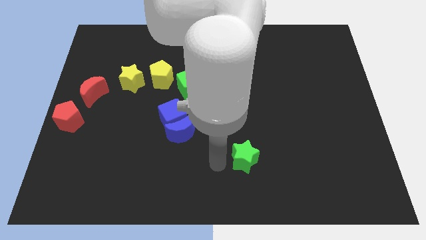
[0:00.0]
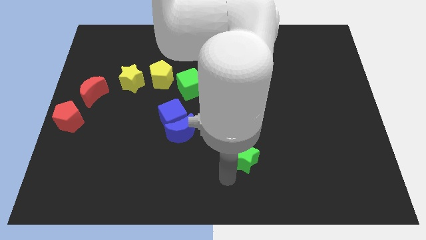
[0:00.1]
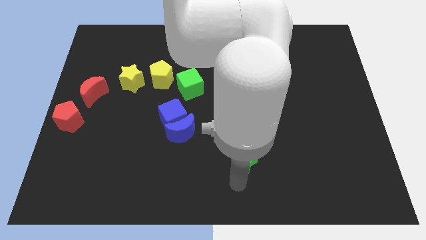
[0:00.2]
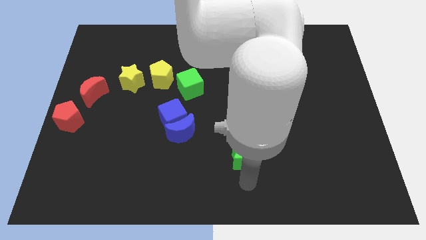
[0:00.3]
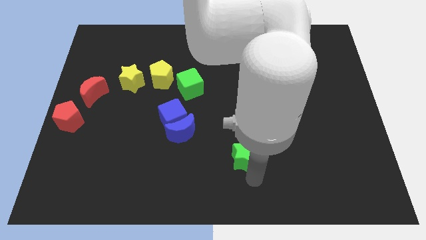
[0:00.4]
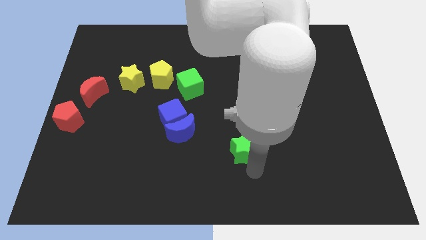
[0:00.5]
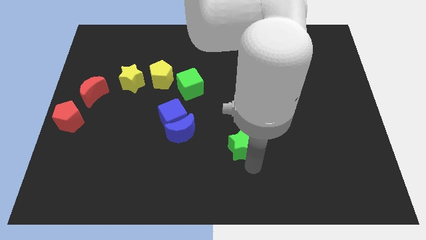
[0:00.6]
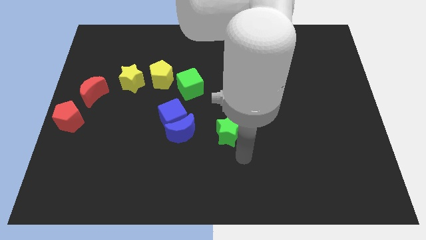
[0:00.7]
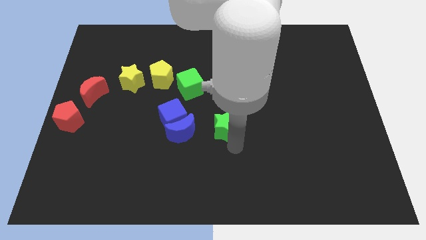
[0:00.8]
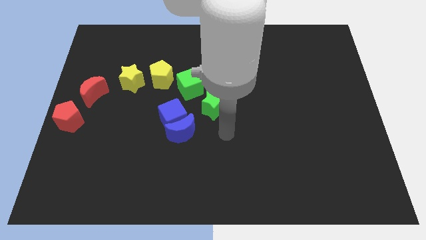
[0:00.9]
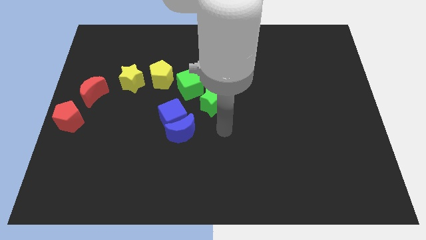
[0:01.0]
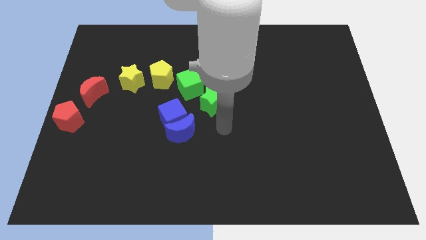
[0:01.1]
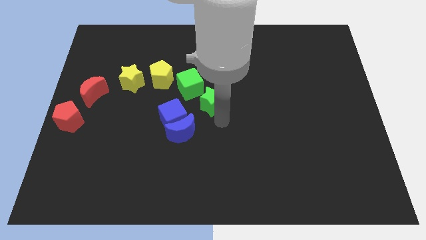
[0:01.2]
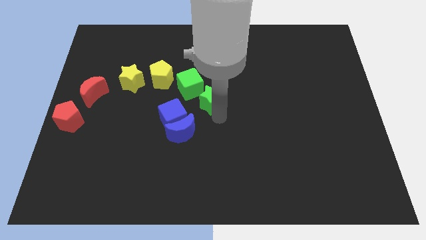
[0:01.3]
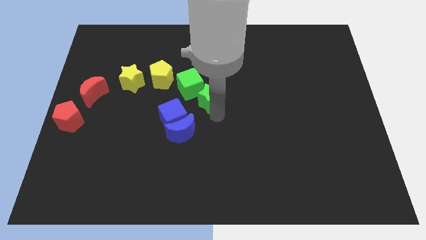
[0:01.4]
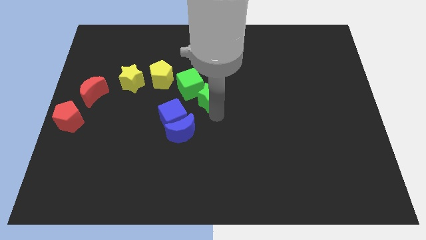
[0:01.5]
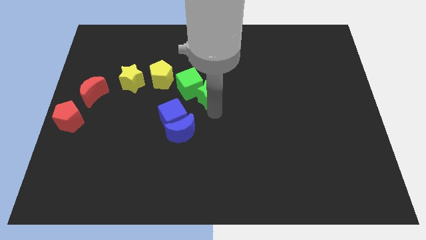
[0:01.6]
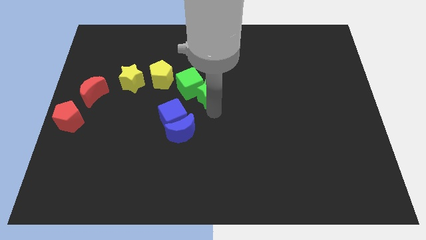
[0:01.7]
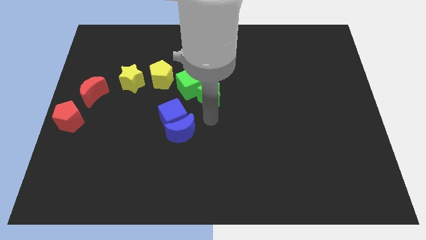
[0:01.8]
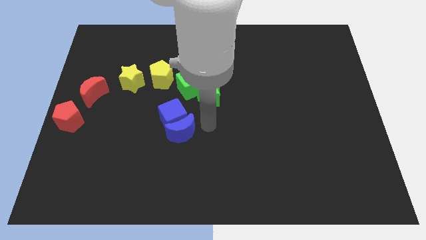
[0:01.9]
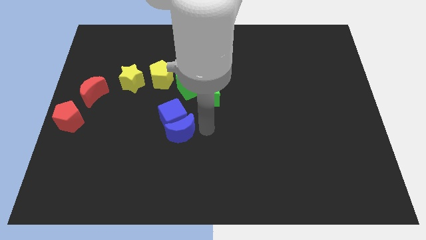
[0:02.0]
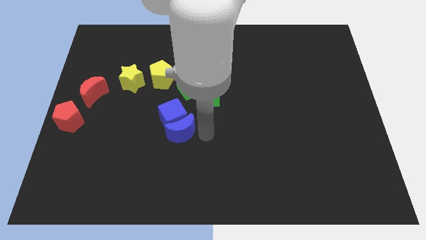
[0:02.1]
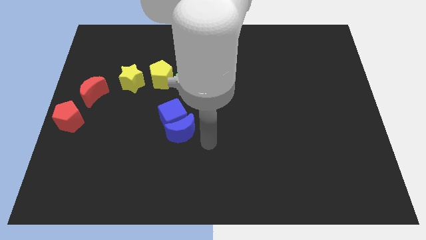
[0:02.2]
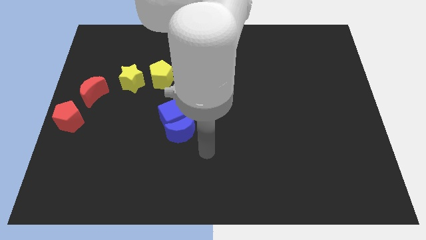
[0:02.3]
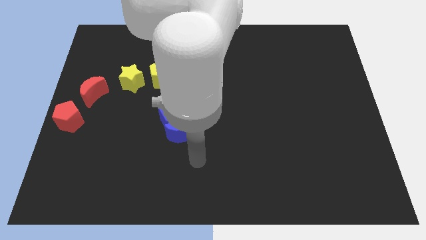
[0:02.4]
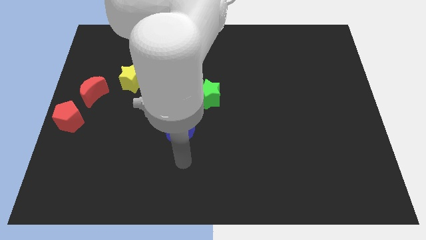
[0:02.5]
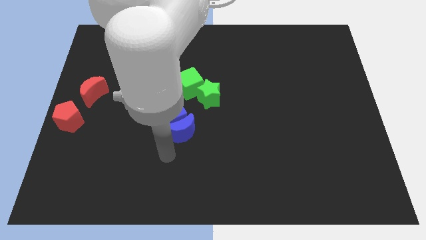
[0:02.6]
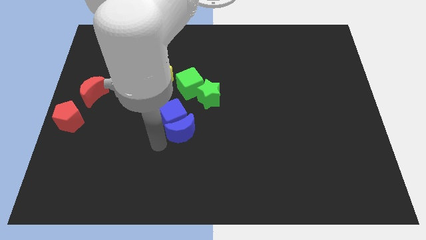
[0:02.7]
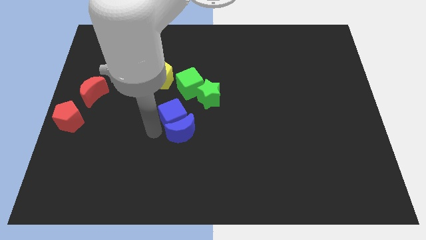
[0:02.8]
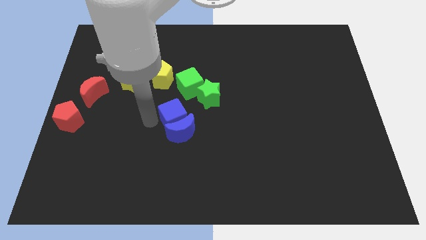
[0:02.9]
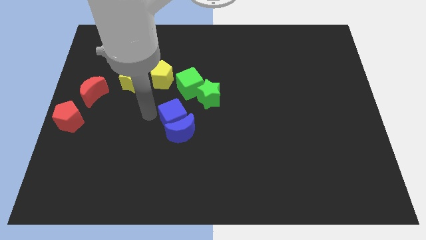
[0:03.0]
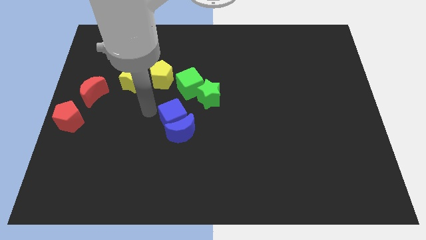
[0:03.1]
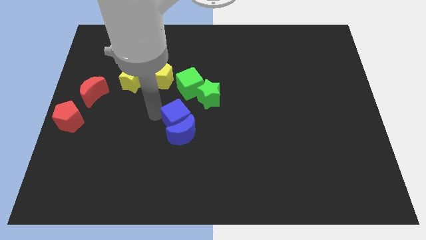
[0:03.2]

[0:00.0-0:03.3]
slide the green star into the green cube

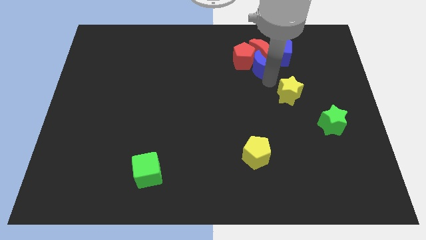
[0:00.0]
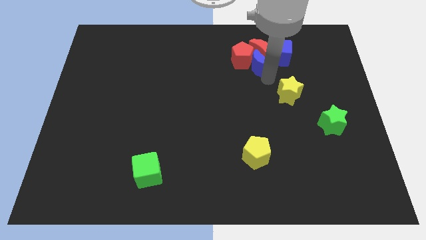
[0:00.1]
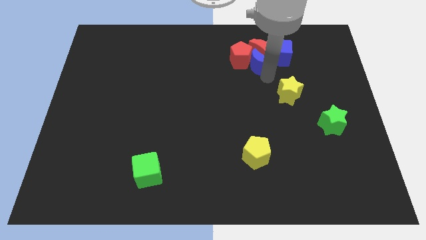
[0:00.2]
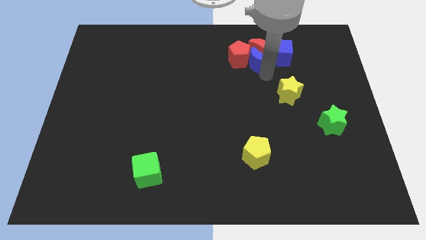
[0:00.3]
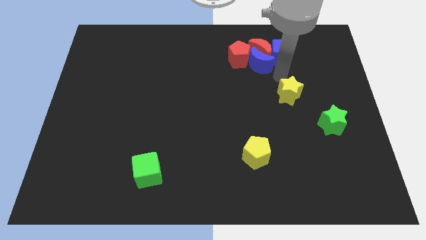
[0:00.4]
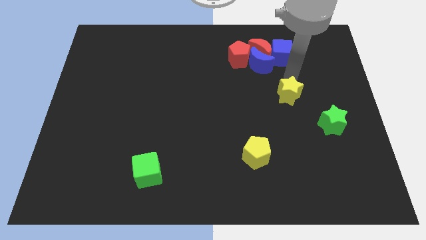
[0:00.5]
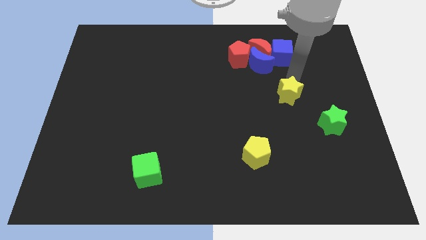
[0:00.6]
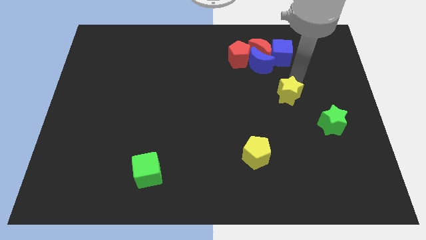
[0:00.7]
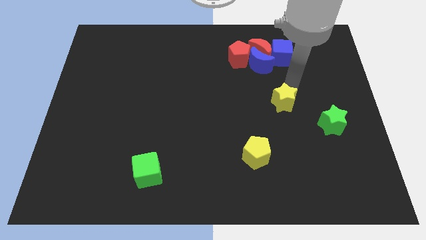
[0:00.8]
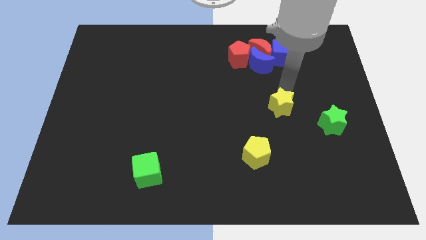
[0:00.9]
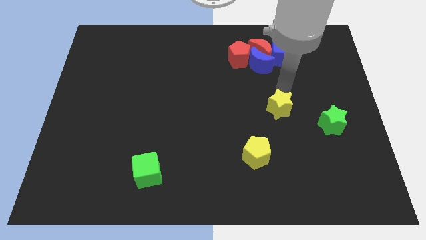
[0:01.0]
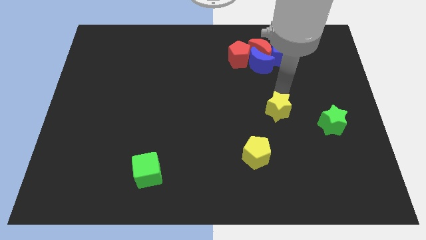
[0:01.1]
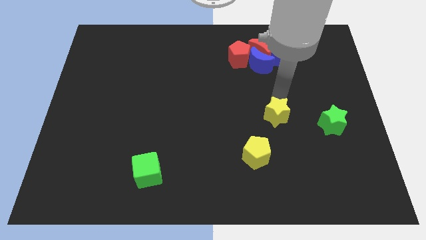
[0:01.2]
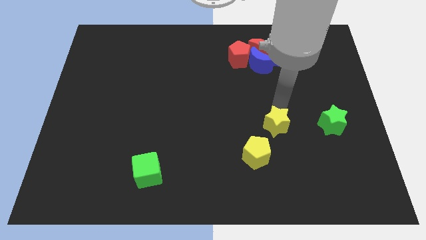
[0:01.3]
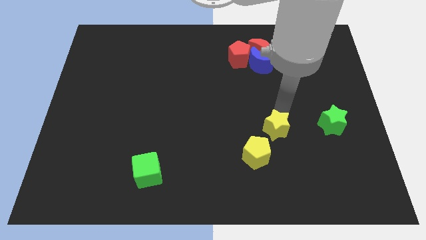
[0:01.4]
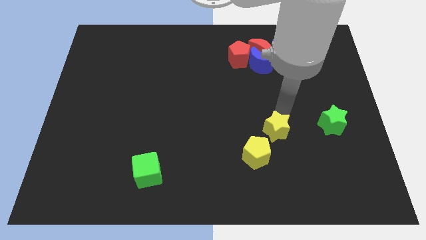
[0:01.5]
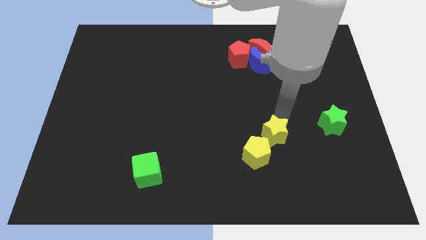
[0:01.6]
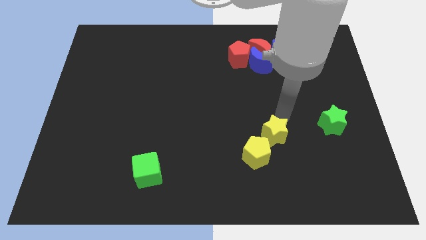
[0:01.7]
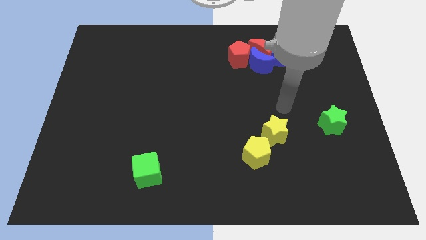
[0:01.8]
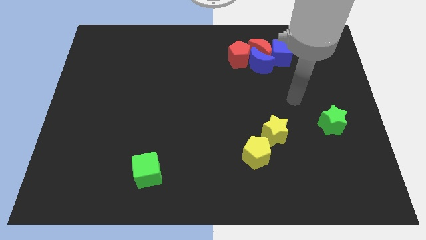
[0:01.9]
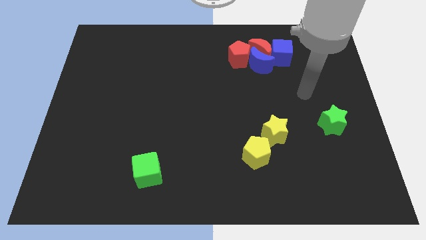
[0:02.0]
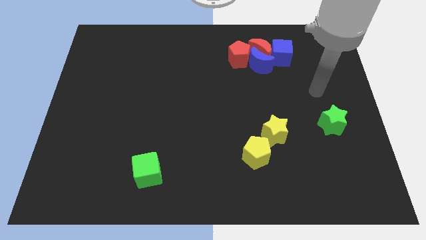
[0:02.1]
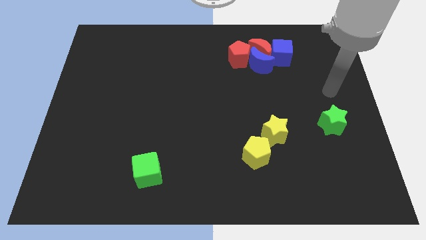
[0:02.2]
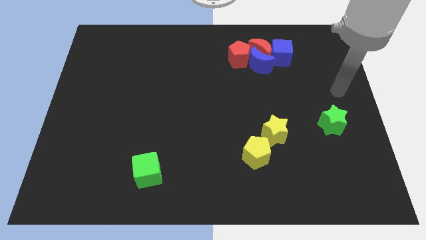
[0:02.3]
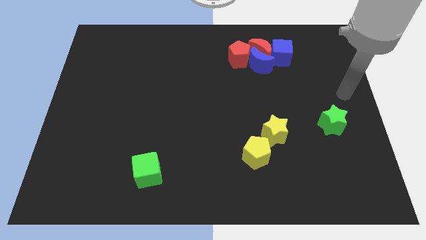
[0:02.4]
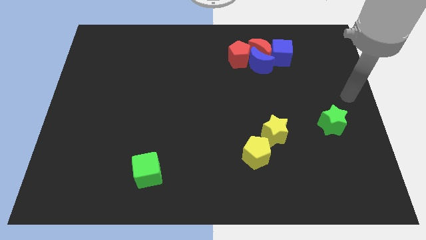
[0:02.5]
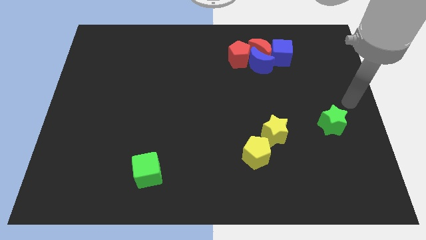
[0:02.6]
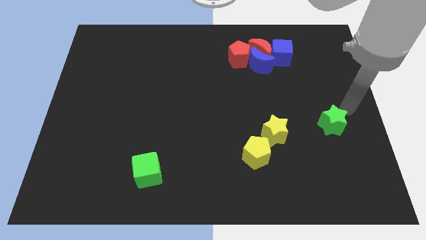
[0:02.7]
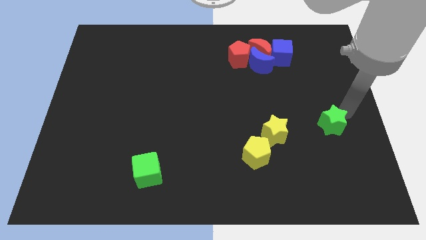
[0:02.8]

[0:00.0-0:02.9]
push yellow star near to yellow pentagon

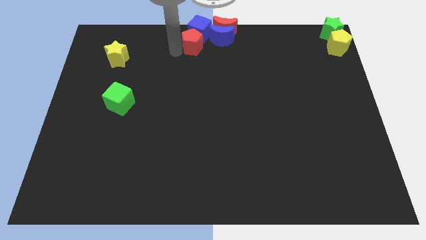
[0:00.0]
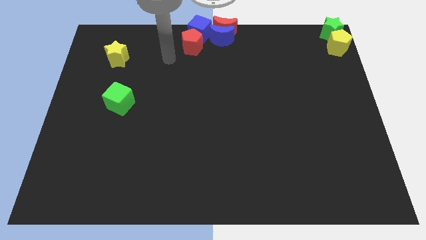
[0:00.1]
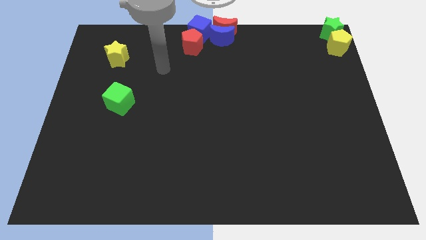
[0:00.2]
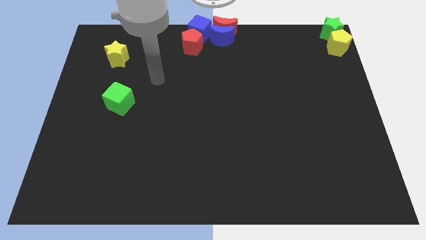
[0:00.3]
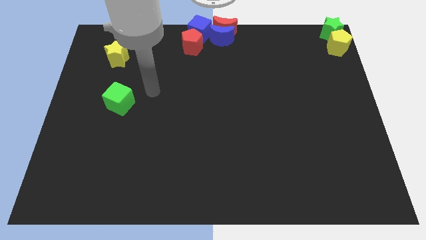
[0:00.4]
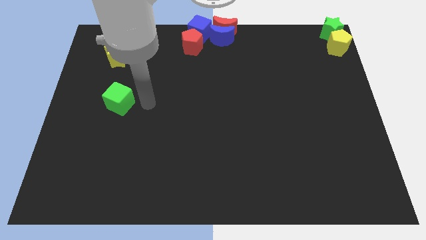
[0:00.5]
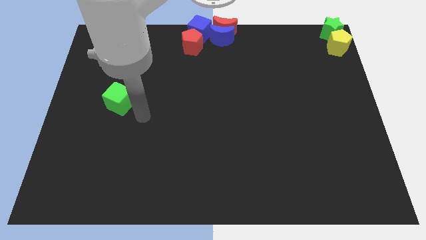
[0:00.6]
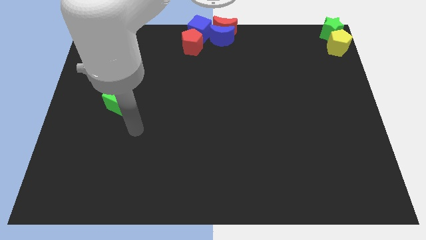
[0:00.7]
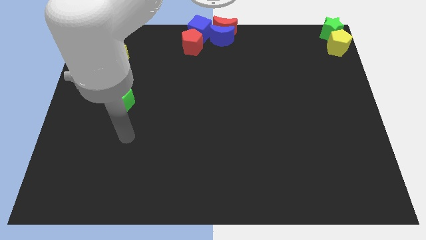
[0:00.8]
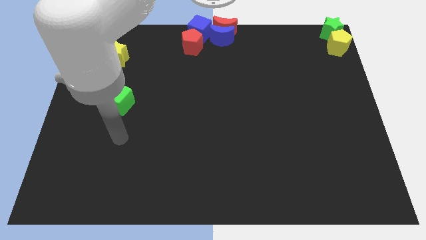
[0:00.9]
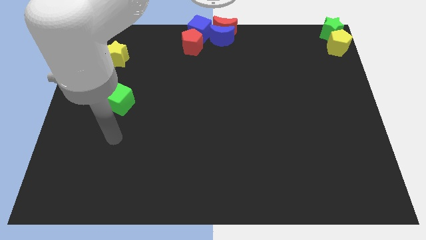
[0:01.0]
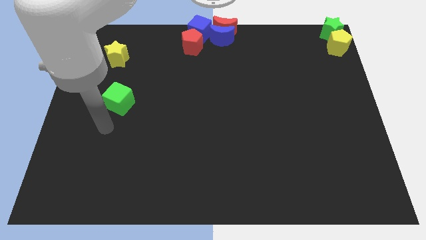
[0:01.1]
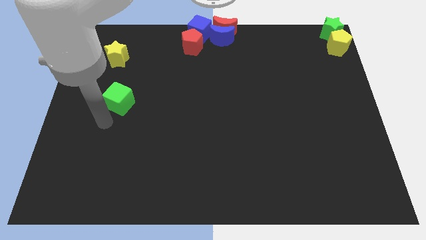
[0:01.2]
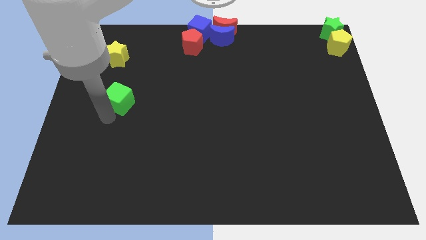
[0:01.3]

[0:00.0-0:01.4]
move your arm closer to the green cube

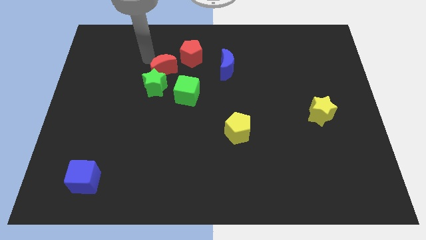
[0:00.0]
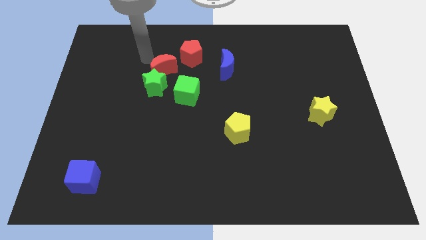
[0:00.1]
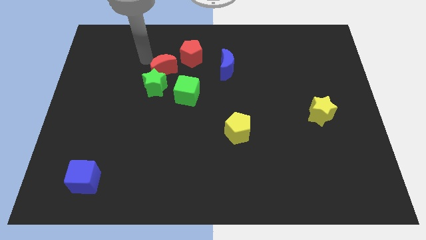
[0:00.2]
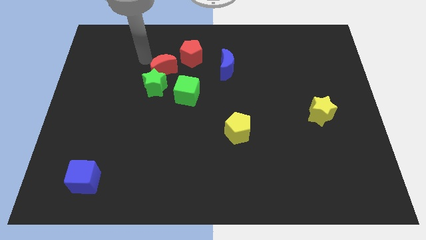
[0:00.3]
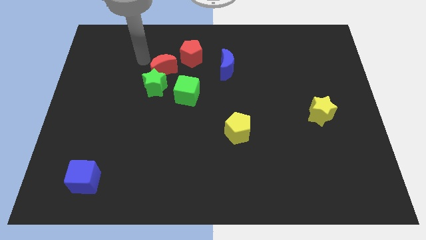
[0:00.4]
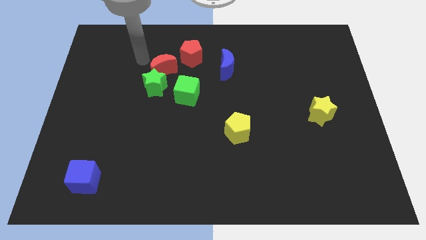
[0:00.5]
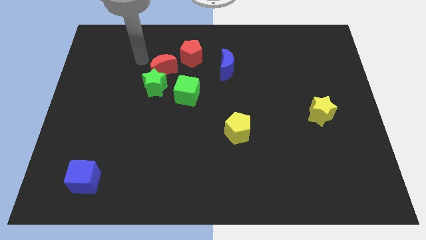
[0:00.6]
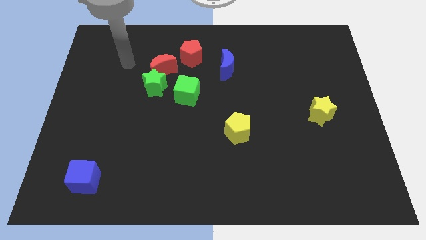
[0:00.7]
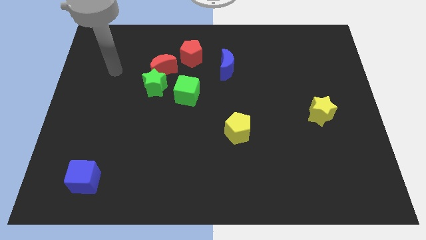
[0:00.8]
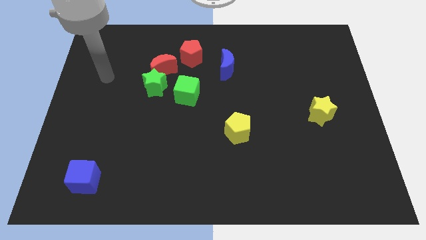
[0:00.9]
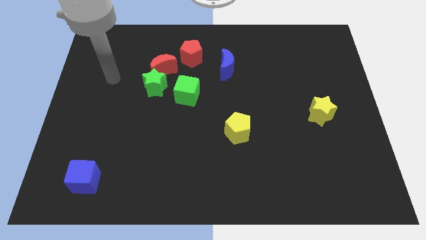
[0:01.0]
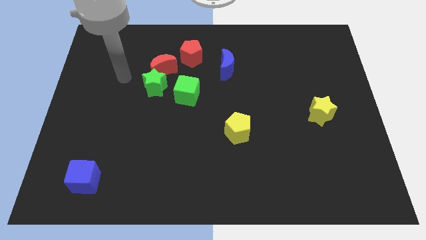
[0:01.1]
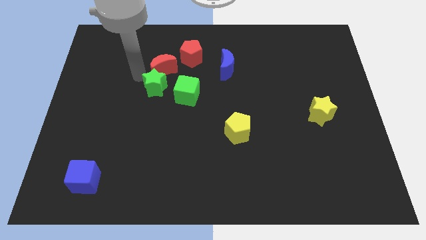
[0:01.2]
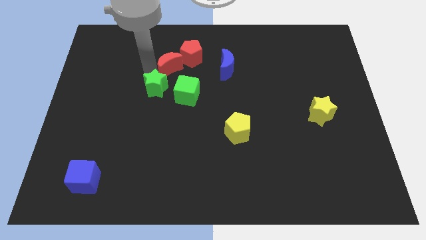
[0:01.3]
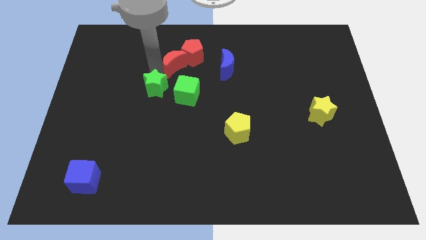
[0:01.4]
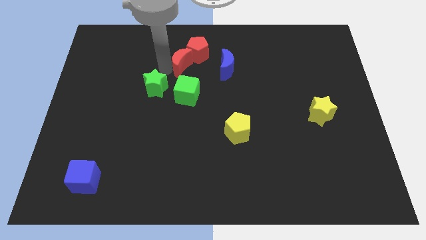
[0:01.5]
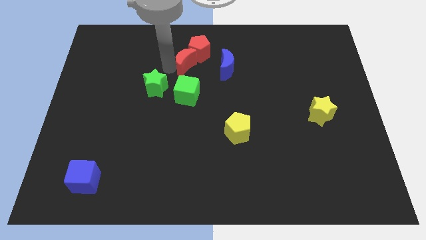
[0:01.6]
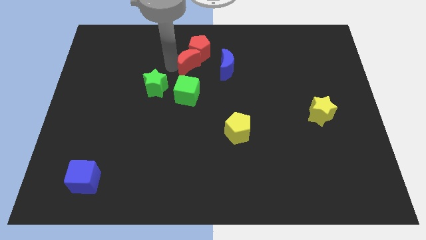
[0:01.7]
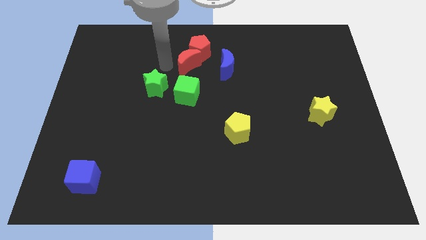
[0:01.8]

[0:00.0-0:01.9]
push the red moon into the red pentagon
